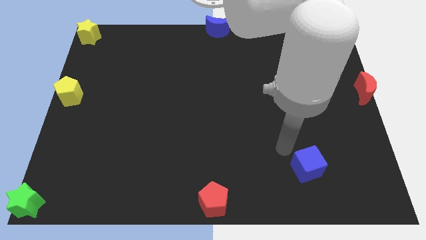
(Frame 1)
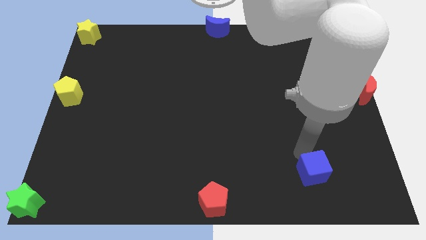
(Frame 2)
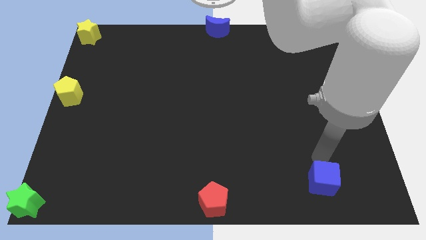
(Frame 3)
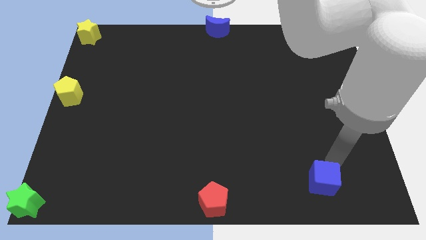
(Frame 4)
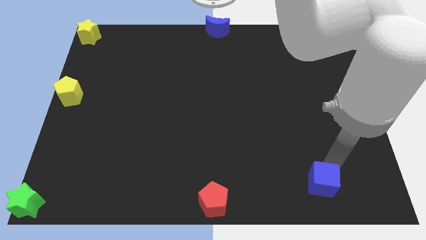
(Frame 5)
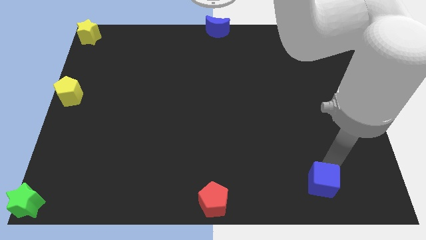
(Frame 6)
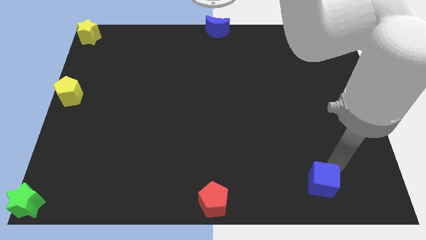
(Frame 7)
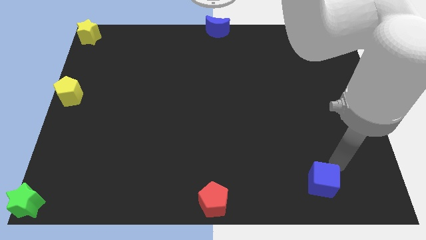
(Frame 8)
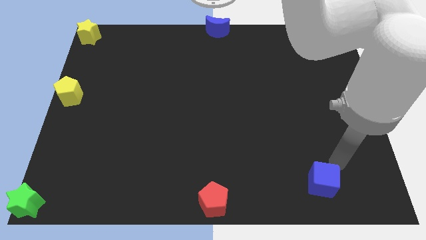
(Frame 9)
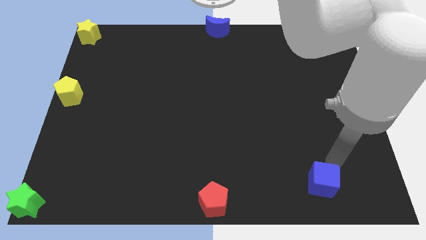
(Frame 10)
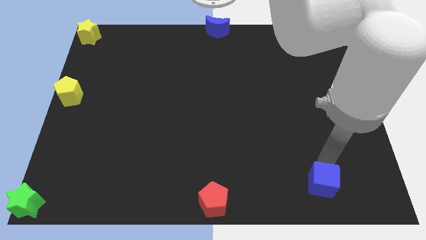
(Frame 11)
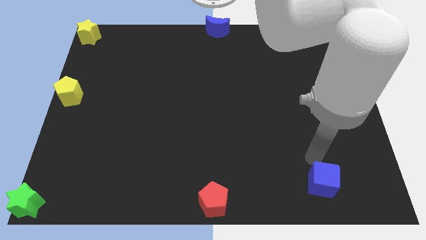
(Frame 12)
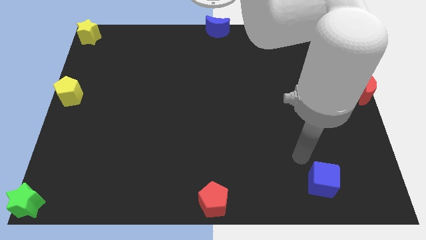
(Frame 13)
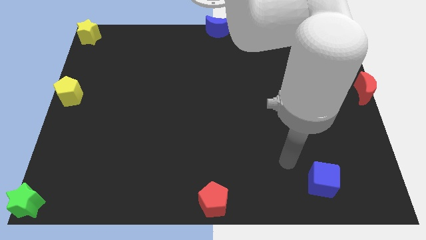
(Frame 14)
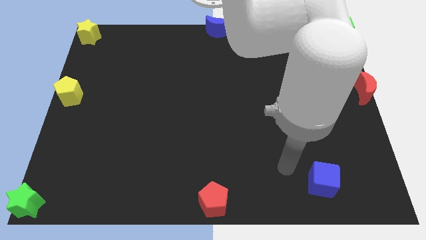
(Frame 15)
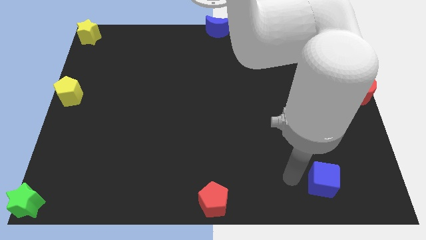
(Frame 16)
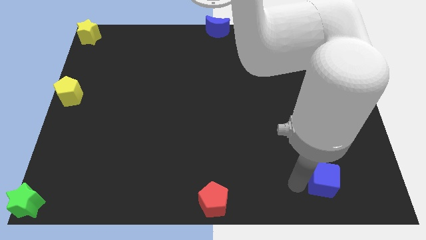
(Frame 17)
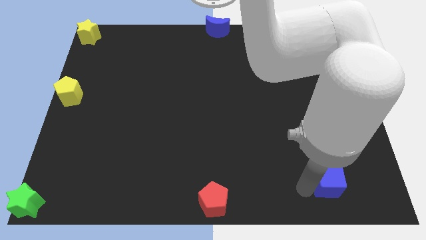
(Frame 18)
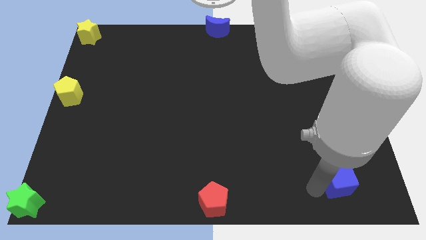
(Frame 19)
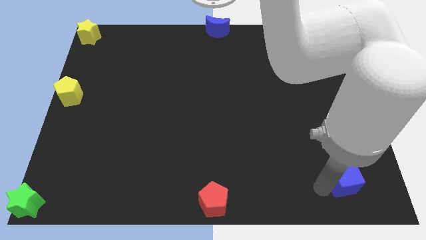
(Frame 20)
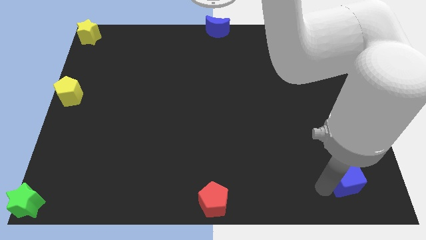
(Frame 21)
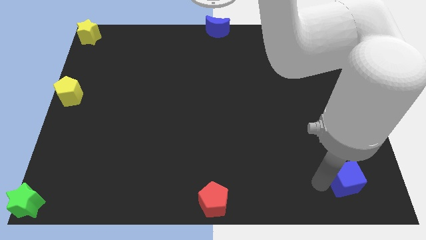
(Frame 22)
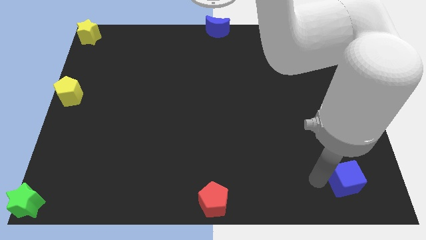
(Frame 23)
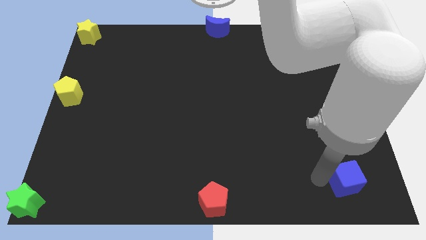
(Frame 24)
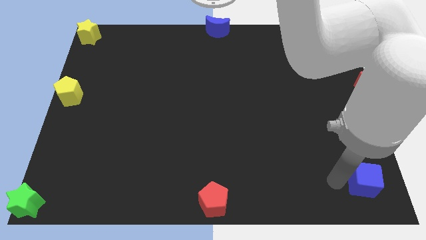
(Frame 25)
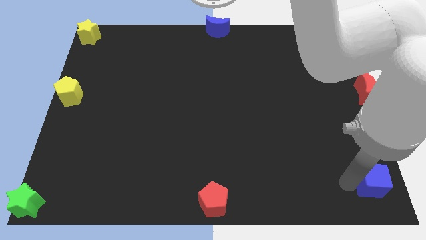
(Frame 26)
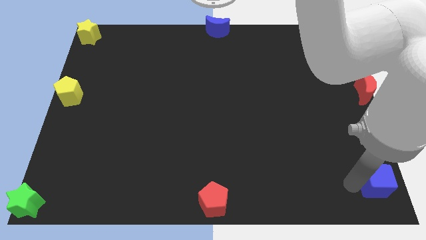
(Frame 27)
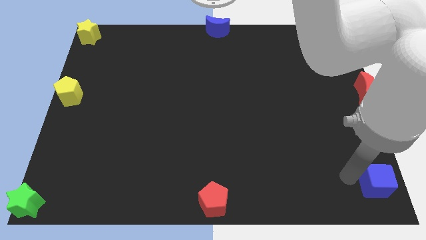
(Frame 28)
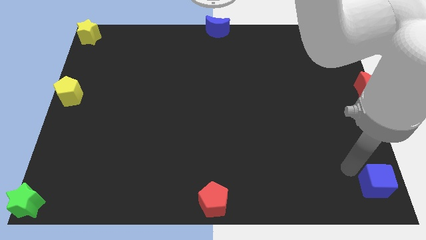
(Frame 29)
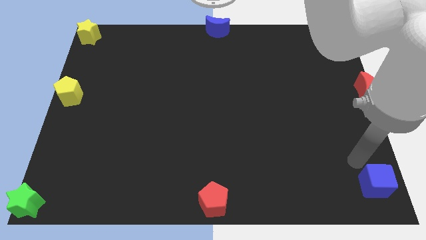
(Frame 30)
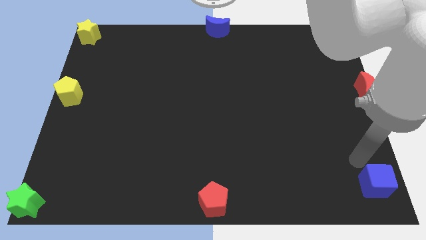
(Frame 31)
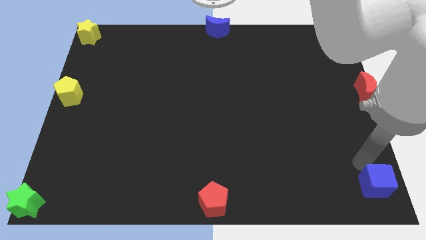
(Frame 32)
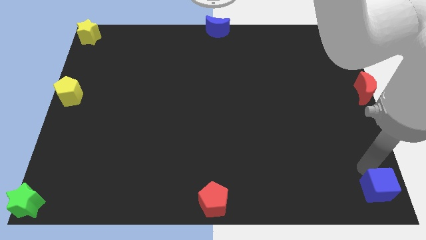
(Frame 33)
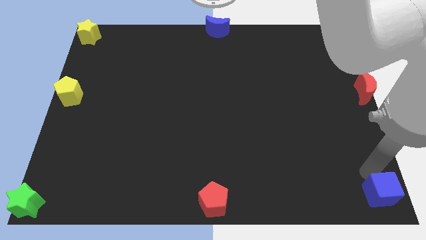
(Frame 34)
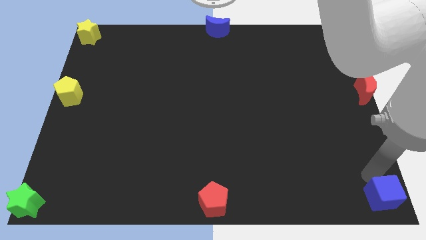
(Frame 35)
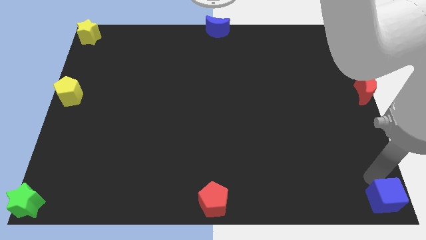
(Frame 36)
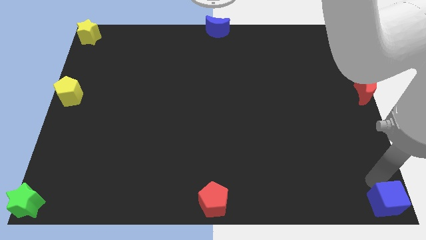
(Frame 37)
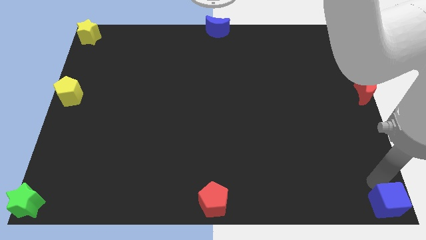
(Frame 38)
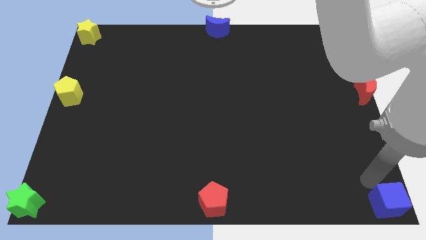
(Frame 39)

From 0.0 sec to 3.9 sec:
push the blue cube to the bottom right corner

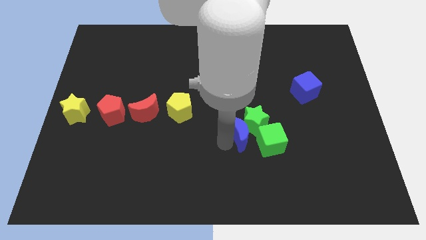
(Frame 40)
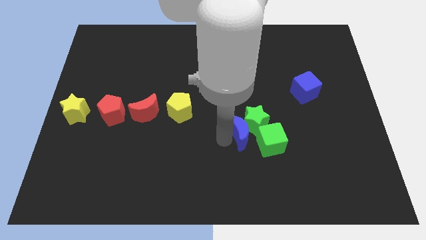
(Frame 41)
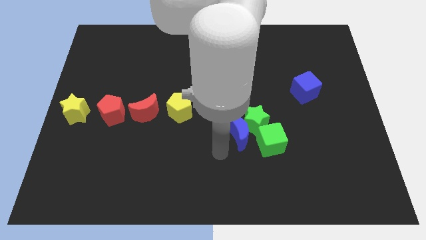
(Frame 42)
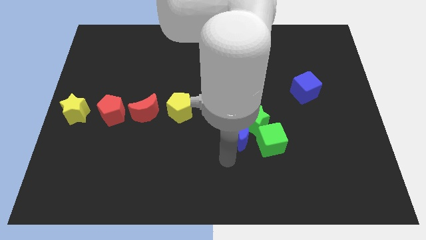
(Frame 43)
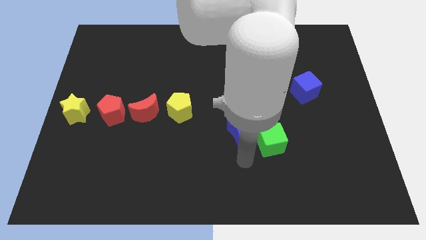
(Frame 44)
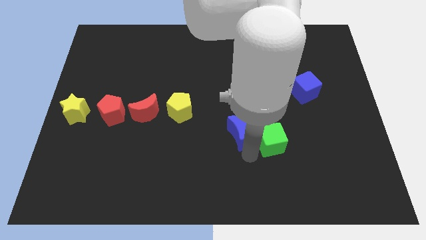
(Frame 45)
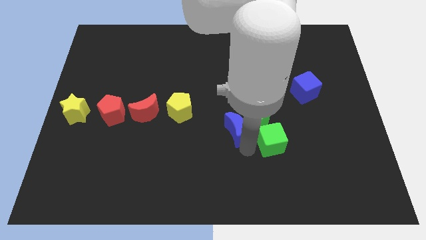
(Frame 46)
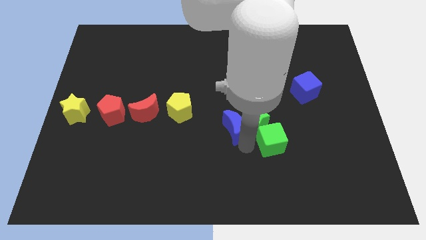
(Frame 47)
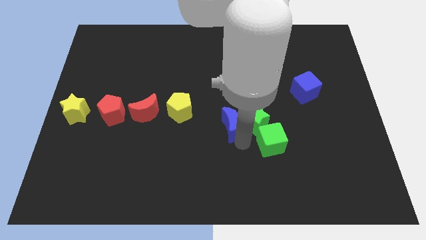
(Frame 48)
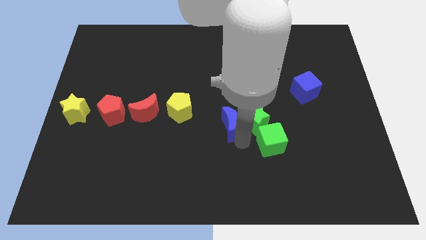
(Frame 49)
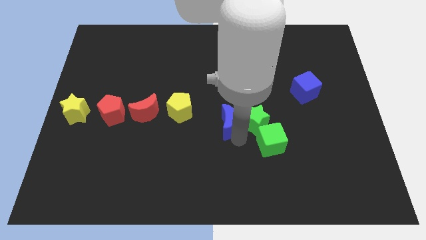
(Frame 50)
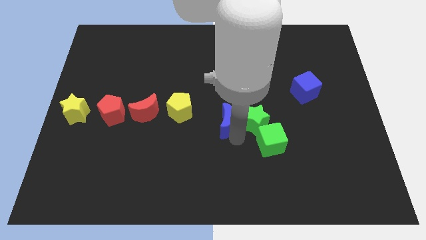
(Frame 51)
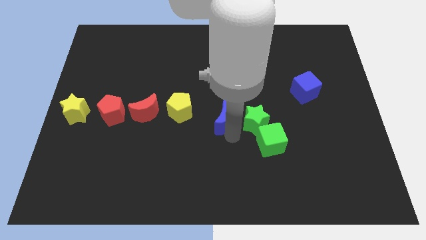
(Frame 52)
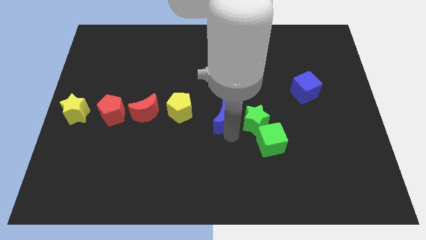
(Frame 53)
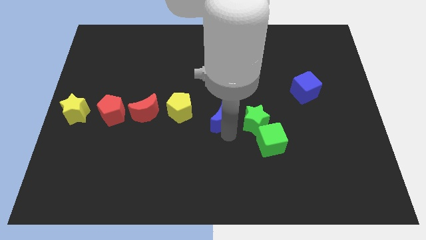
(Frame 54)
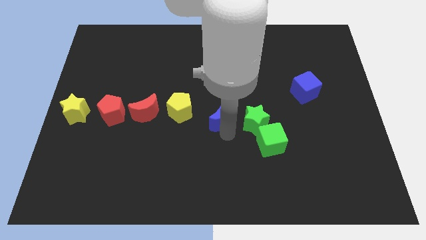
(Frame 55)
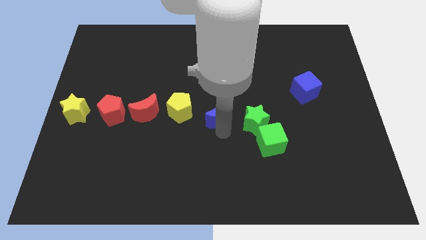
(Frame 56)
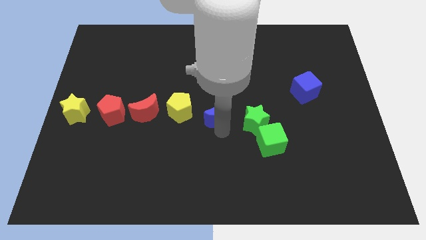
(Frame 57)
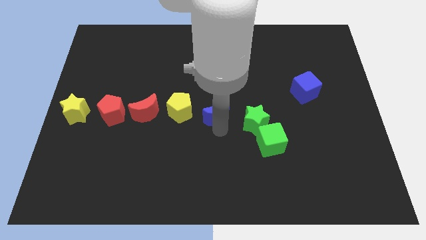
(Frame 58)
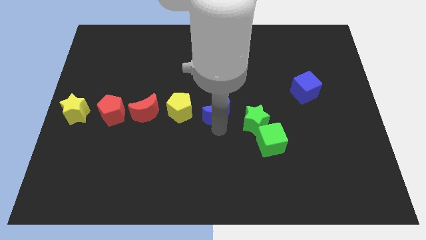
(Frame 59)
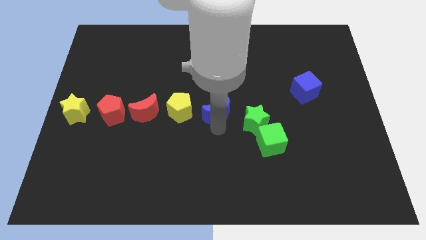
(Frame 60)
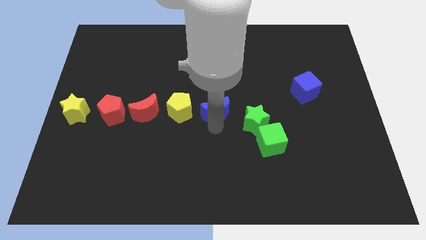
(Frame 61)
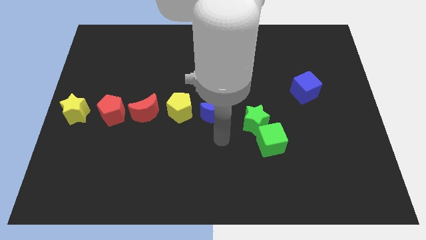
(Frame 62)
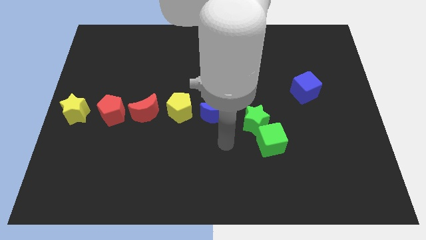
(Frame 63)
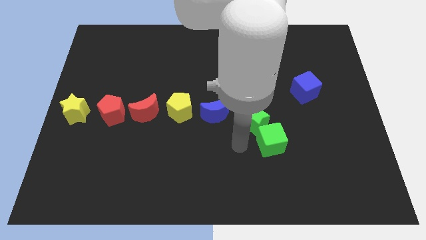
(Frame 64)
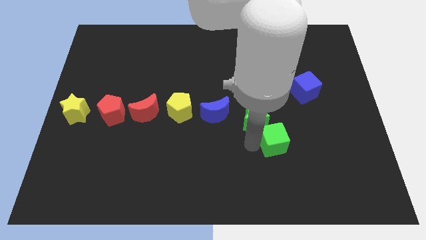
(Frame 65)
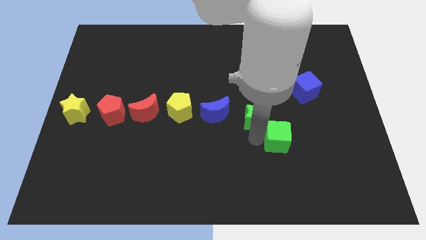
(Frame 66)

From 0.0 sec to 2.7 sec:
place blue crescent beside yellow pentagon

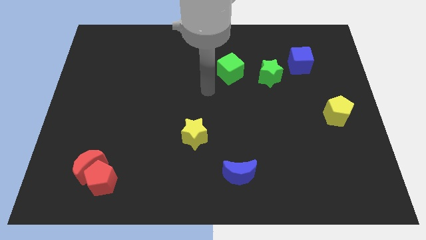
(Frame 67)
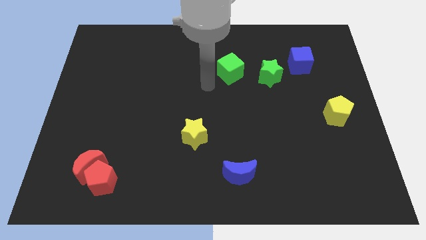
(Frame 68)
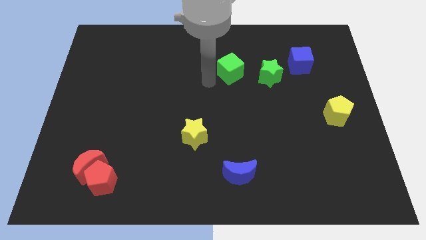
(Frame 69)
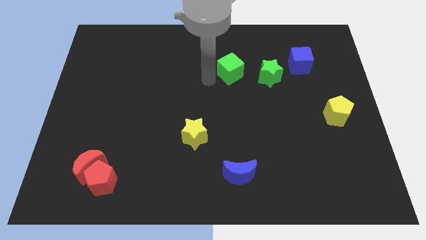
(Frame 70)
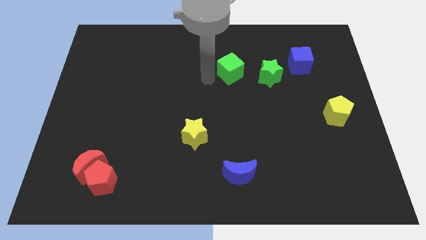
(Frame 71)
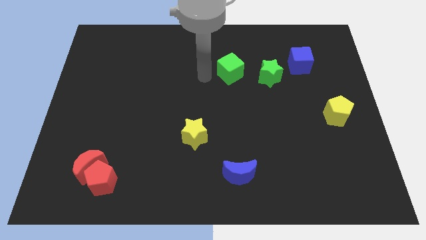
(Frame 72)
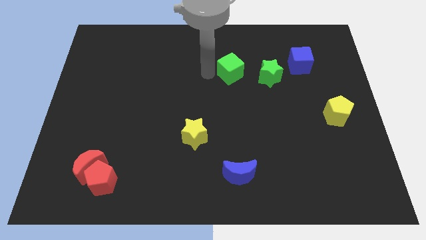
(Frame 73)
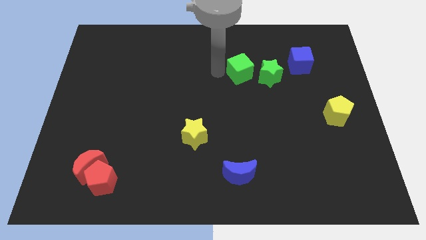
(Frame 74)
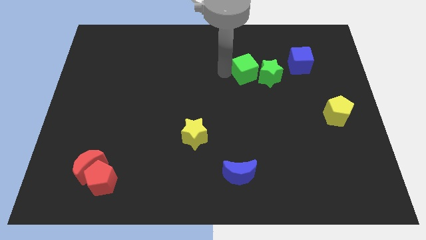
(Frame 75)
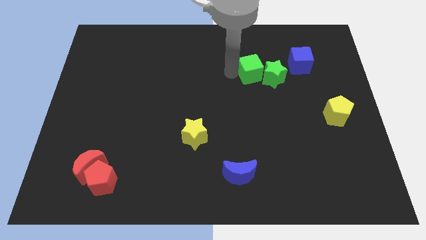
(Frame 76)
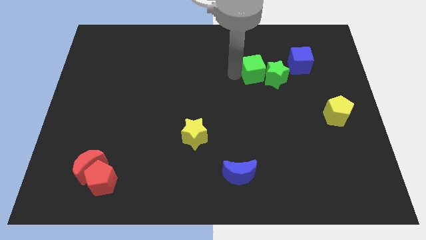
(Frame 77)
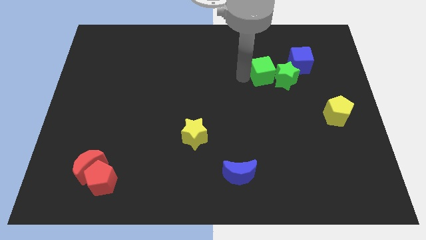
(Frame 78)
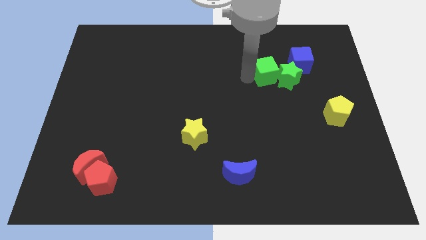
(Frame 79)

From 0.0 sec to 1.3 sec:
push the green blocks towards the right side of the board

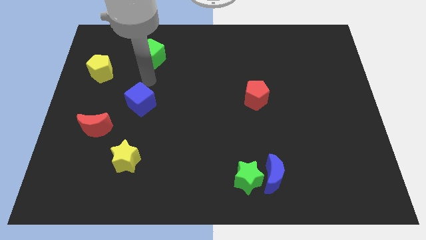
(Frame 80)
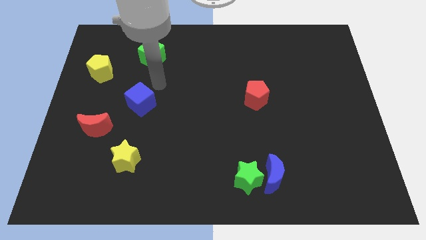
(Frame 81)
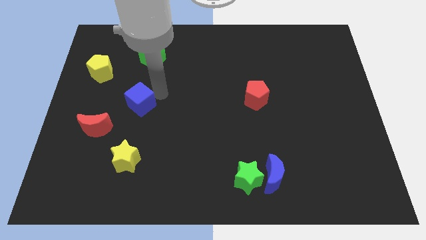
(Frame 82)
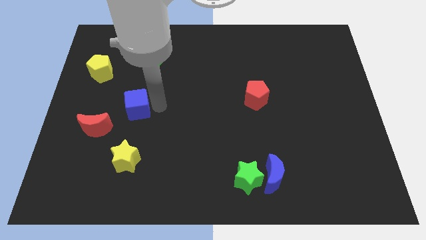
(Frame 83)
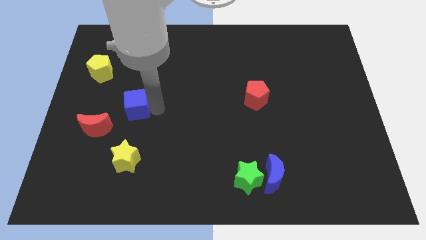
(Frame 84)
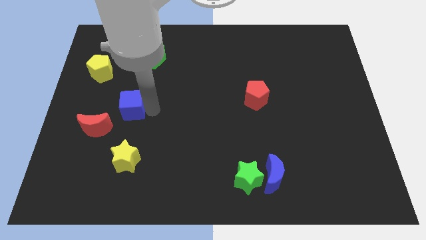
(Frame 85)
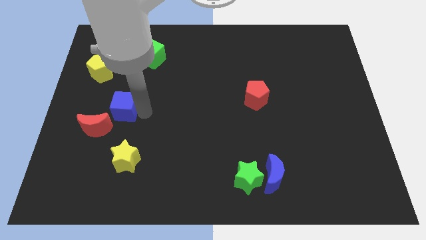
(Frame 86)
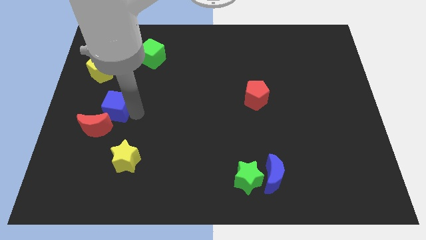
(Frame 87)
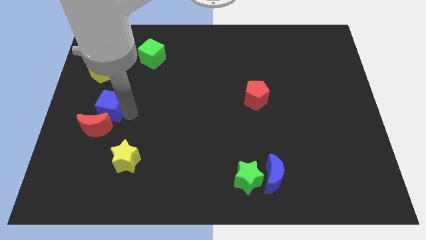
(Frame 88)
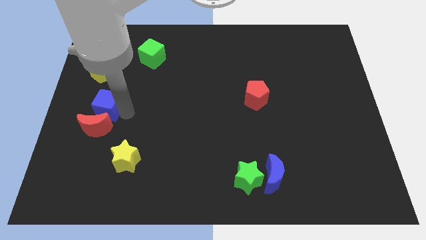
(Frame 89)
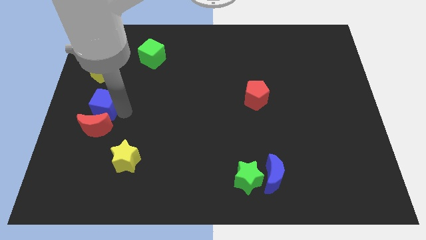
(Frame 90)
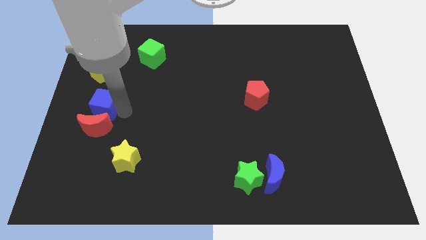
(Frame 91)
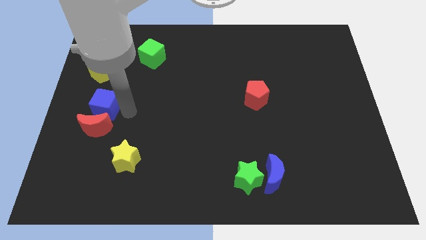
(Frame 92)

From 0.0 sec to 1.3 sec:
push the blue cube above the red moon
